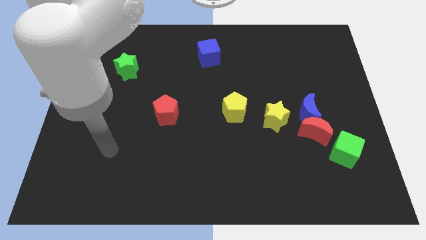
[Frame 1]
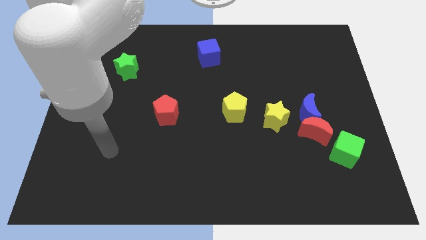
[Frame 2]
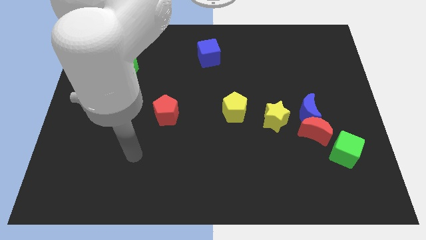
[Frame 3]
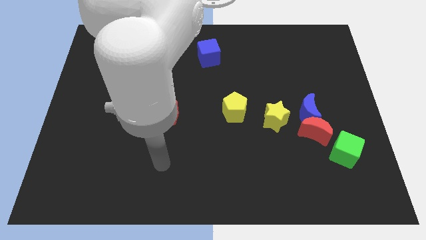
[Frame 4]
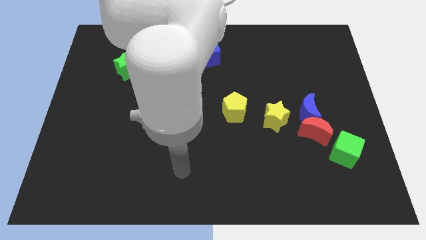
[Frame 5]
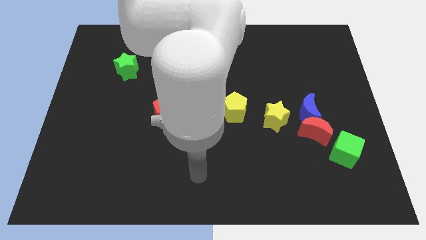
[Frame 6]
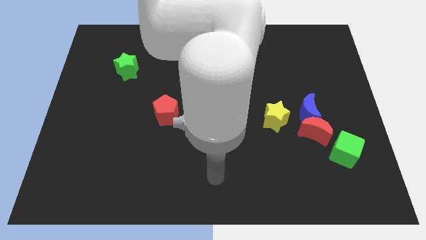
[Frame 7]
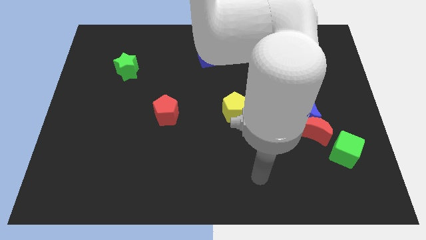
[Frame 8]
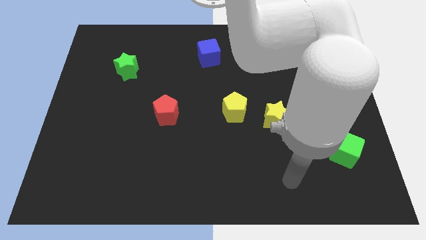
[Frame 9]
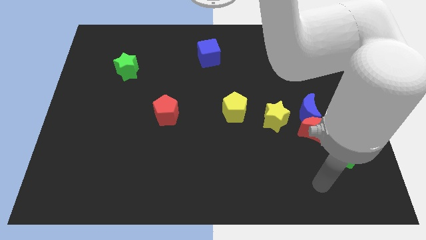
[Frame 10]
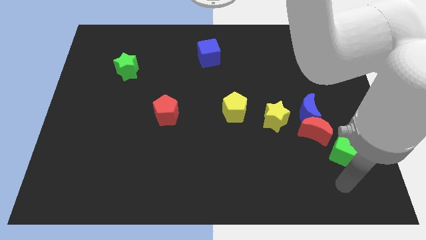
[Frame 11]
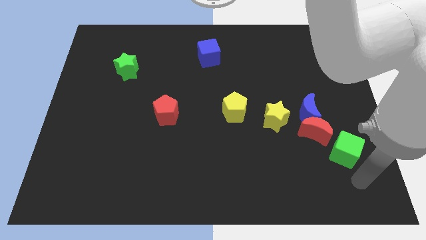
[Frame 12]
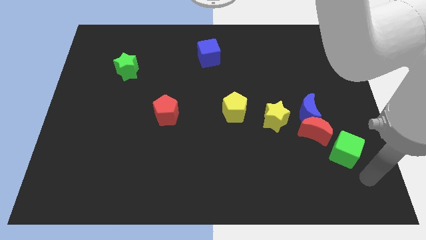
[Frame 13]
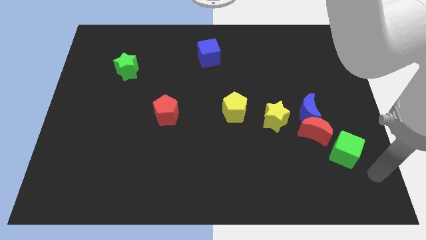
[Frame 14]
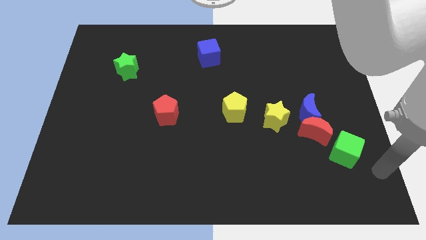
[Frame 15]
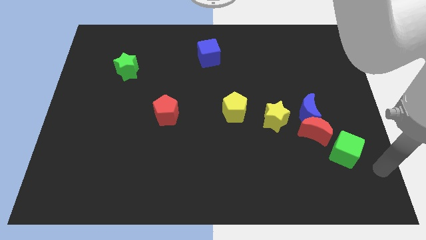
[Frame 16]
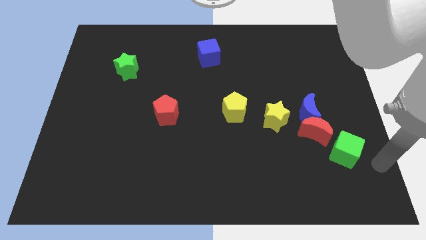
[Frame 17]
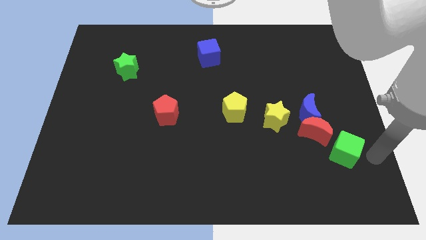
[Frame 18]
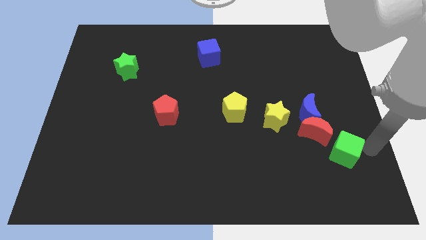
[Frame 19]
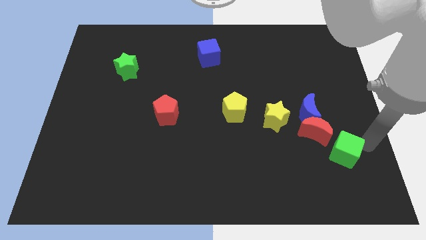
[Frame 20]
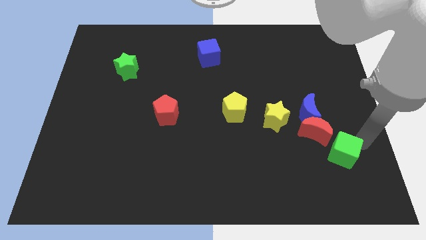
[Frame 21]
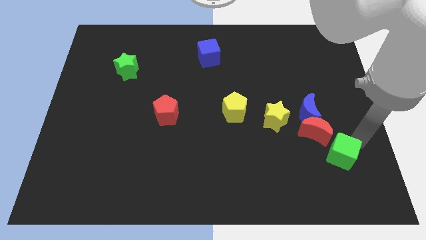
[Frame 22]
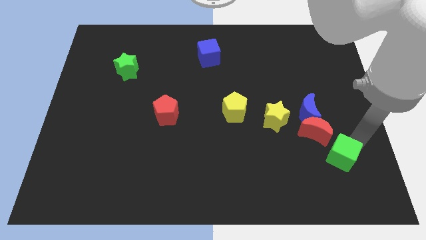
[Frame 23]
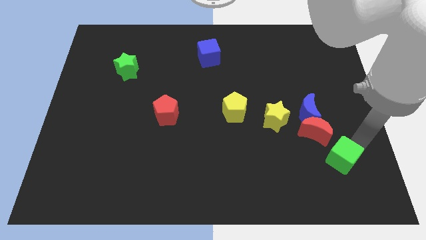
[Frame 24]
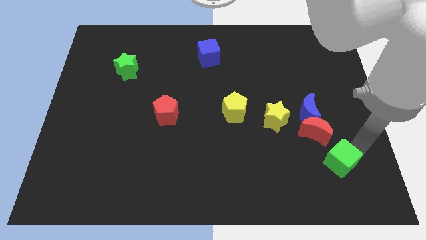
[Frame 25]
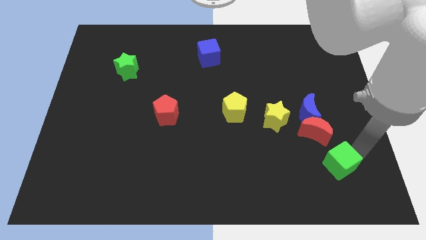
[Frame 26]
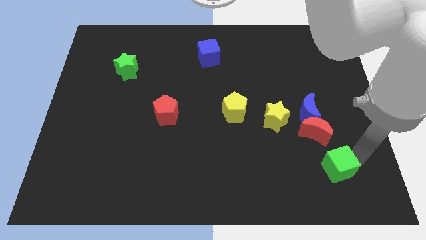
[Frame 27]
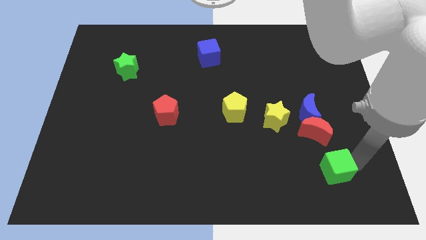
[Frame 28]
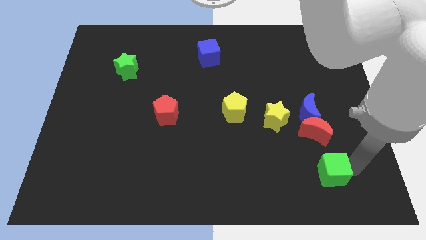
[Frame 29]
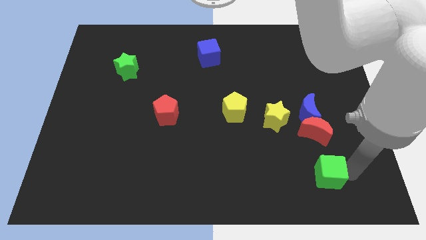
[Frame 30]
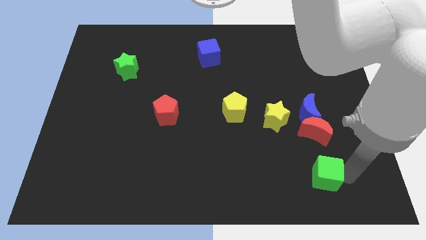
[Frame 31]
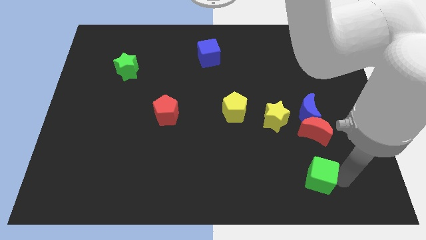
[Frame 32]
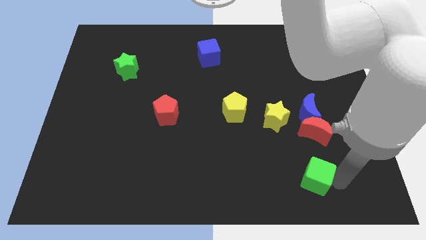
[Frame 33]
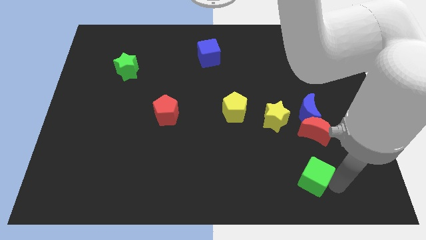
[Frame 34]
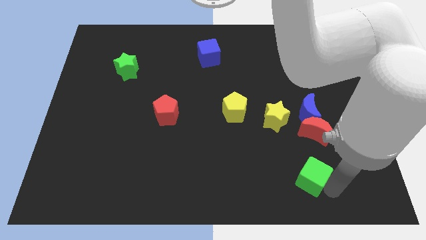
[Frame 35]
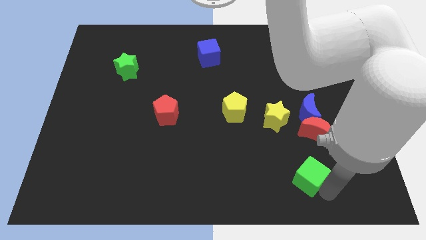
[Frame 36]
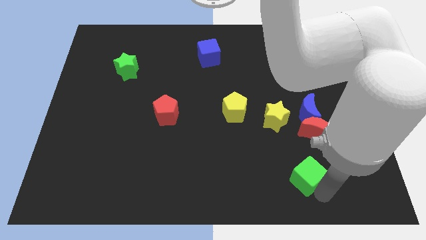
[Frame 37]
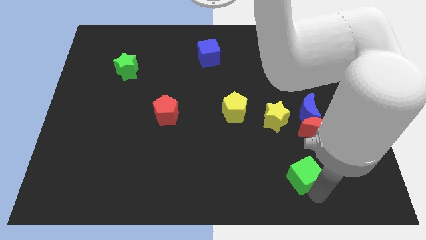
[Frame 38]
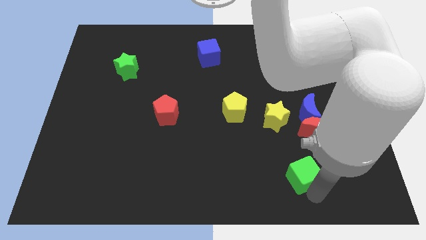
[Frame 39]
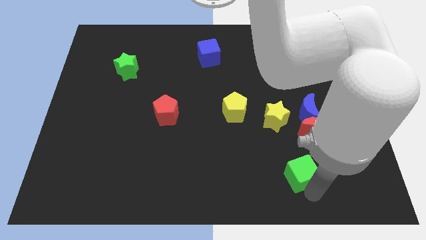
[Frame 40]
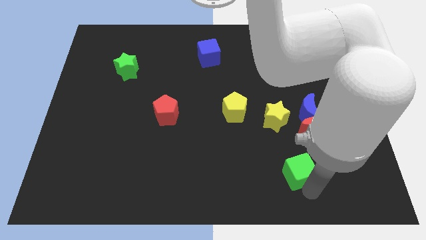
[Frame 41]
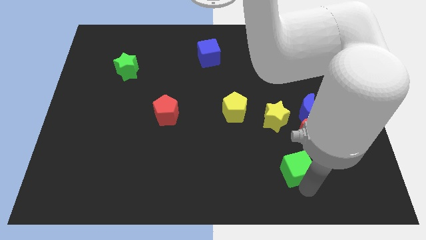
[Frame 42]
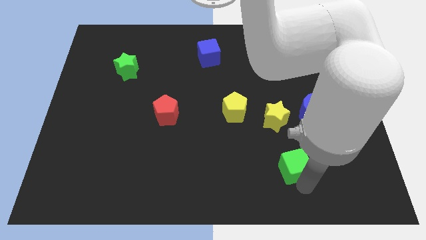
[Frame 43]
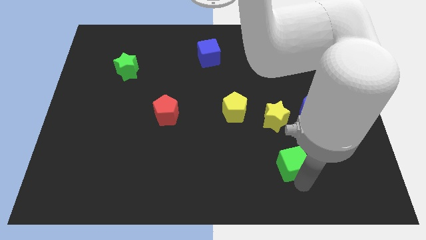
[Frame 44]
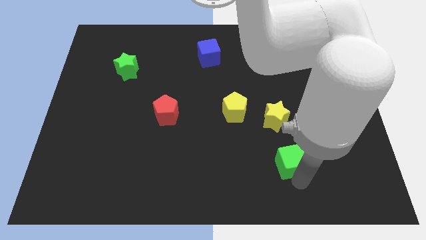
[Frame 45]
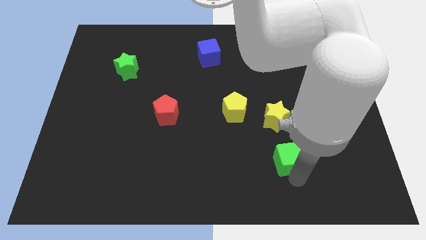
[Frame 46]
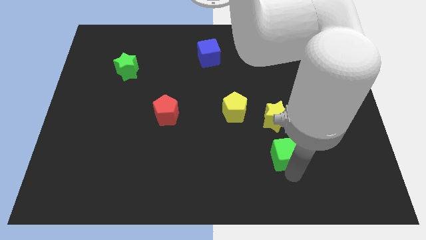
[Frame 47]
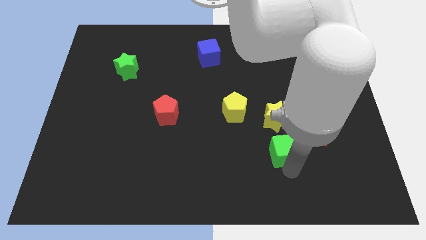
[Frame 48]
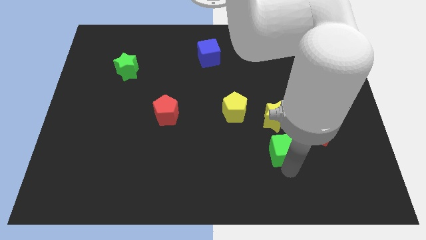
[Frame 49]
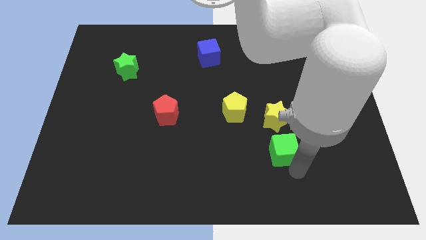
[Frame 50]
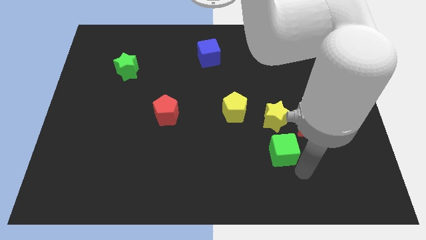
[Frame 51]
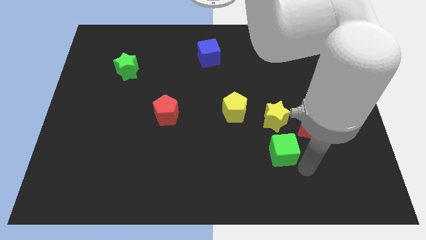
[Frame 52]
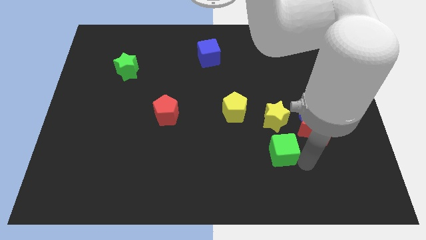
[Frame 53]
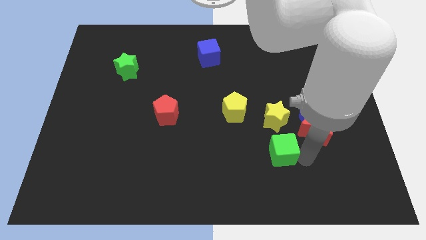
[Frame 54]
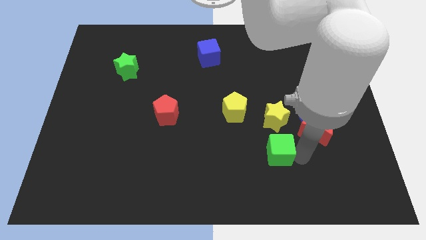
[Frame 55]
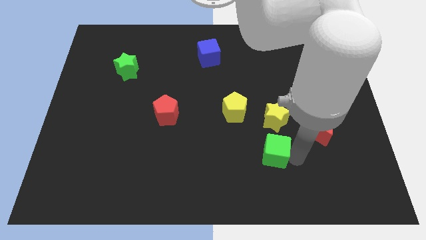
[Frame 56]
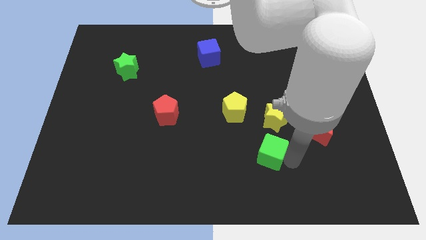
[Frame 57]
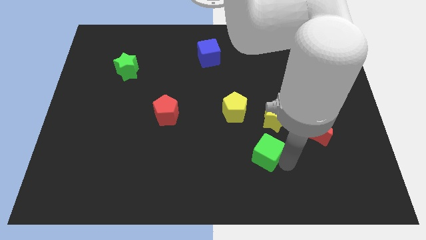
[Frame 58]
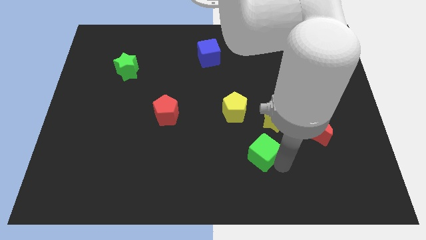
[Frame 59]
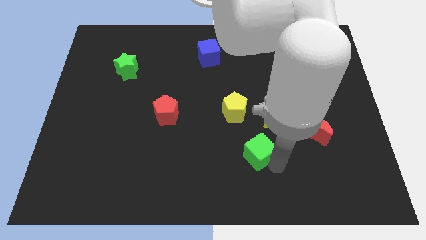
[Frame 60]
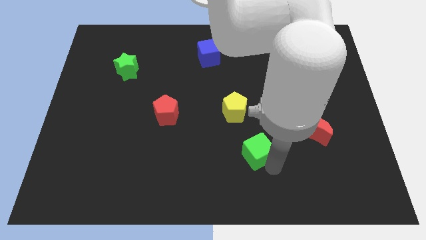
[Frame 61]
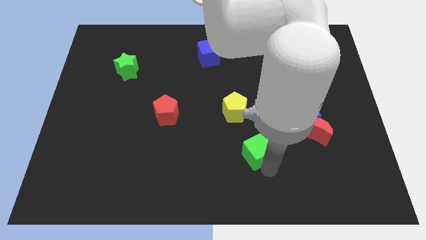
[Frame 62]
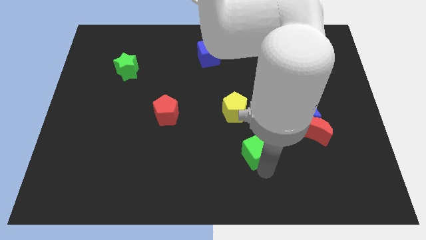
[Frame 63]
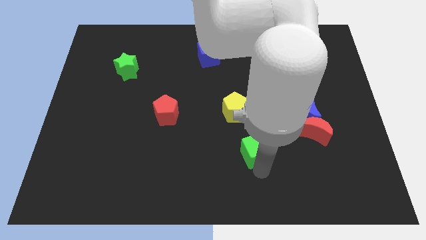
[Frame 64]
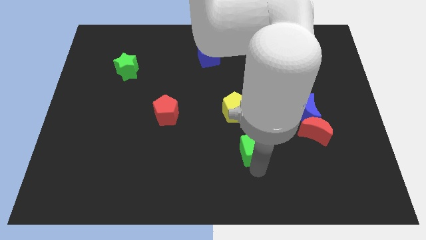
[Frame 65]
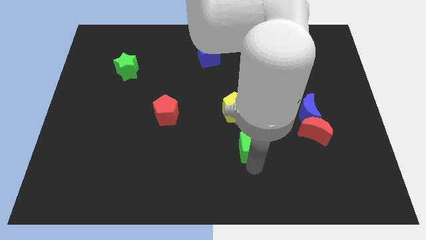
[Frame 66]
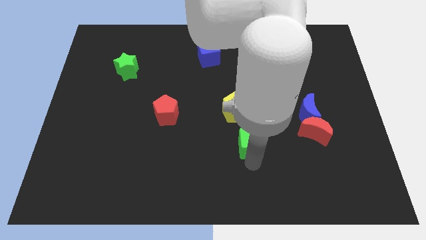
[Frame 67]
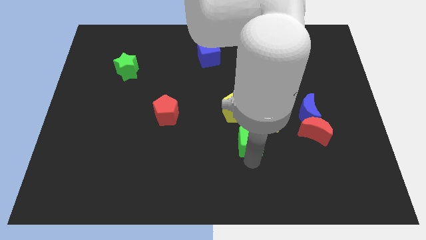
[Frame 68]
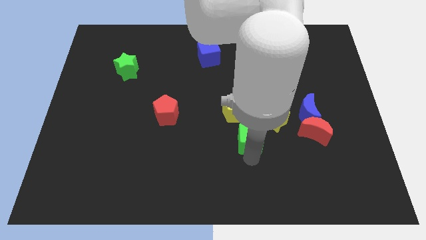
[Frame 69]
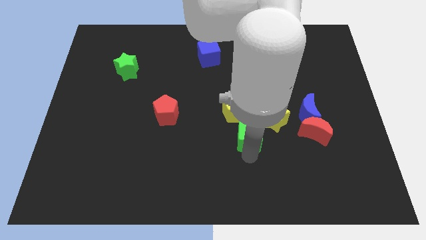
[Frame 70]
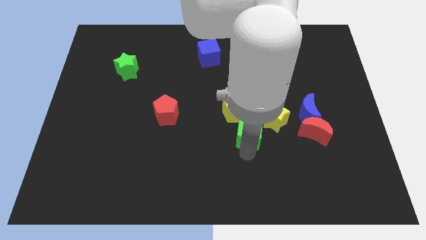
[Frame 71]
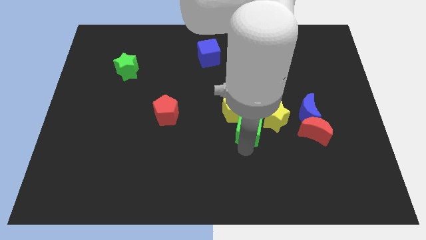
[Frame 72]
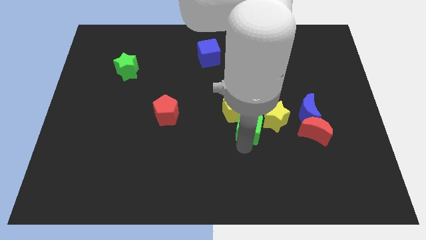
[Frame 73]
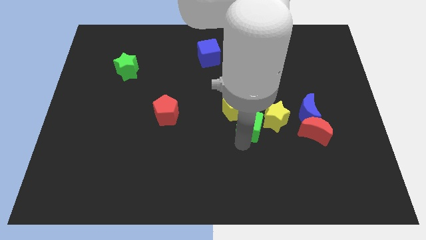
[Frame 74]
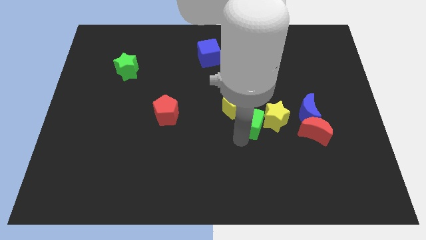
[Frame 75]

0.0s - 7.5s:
put the green cube to the yellow pentagon

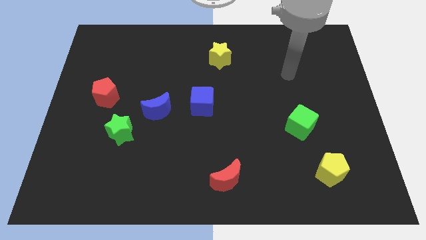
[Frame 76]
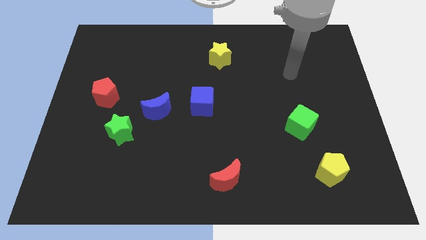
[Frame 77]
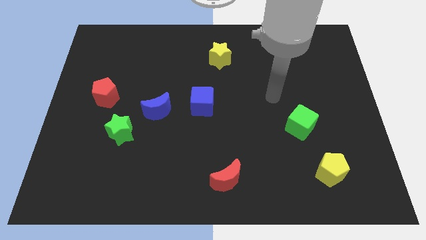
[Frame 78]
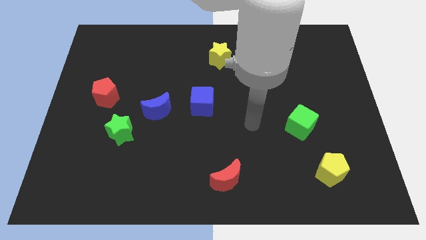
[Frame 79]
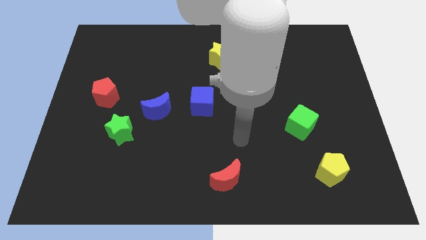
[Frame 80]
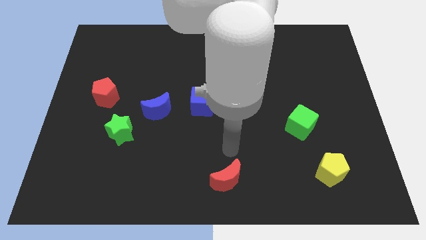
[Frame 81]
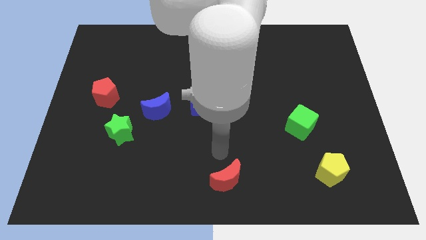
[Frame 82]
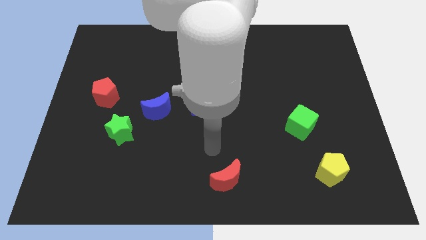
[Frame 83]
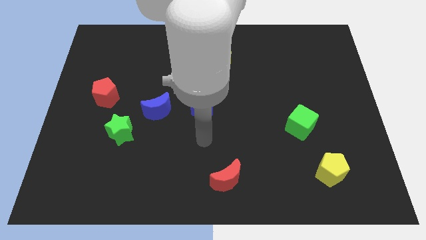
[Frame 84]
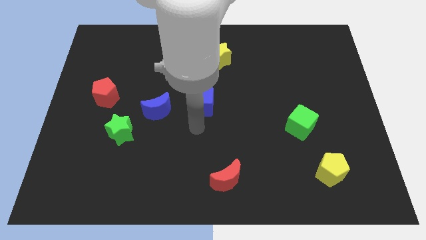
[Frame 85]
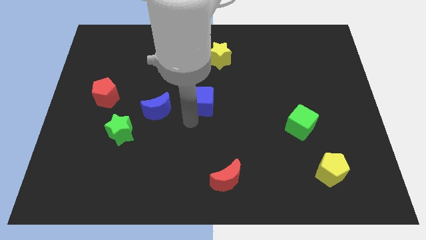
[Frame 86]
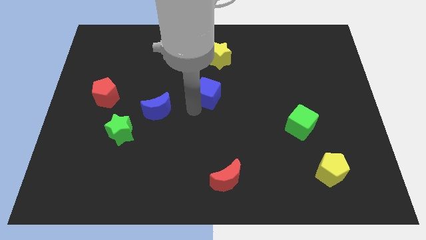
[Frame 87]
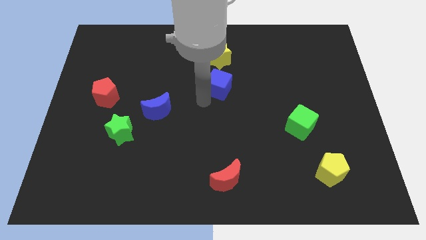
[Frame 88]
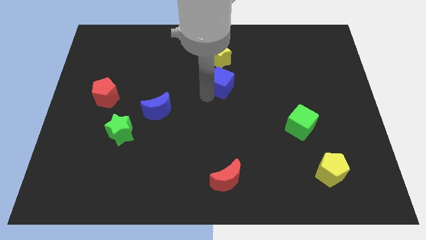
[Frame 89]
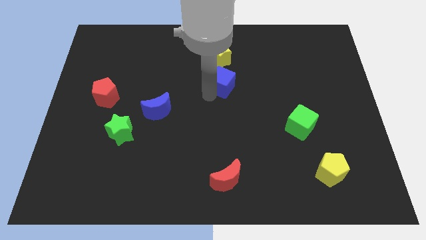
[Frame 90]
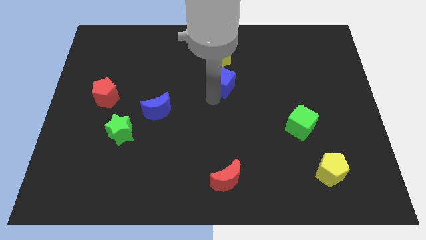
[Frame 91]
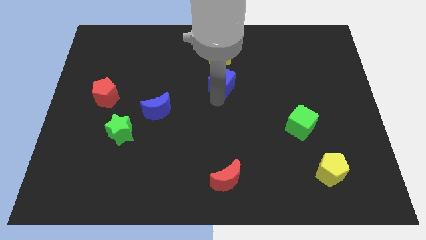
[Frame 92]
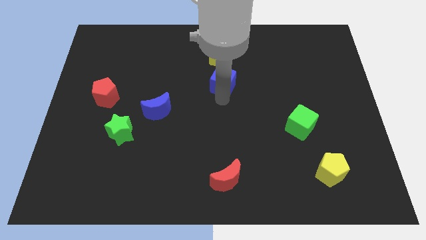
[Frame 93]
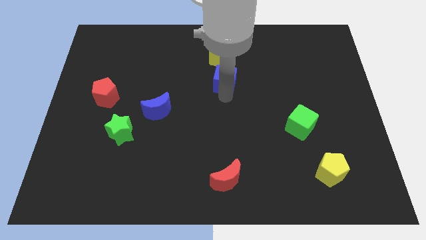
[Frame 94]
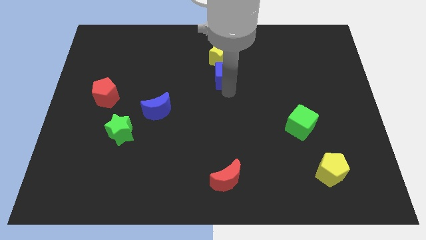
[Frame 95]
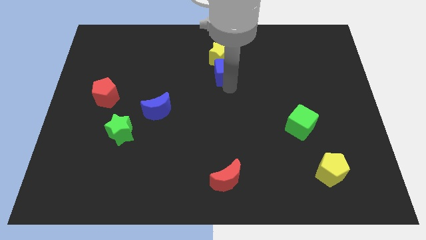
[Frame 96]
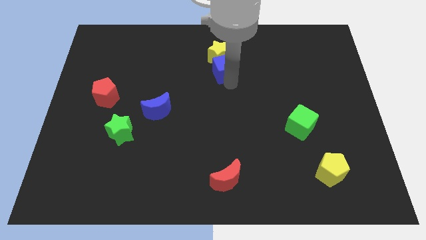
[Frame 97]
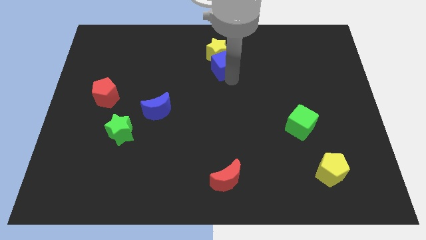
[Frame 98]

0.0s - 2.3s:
push the blue cube close to the yellow star
